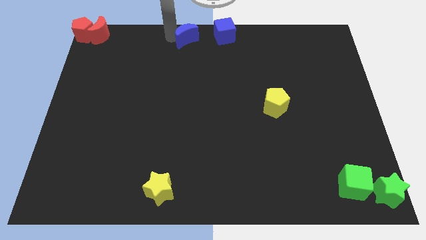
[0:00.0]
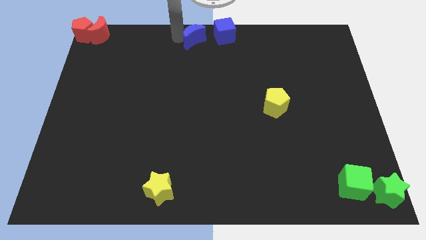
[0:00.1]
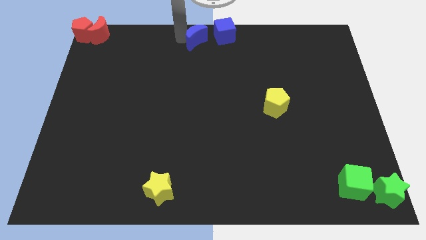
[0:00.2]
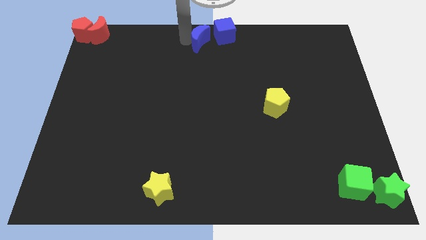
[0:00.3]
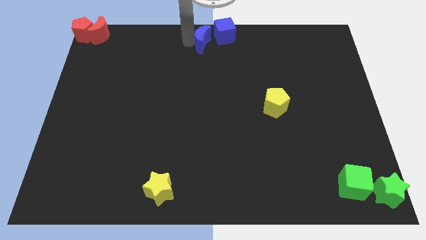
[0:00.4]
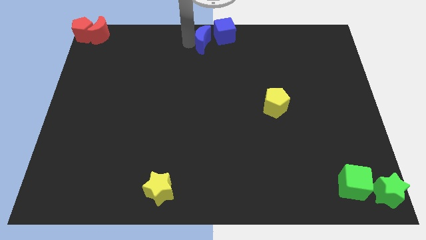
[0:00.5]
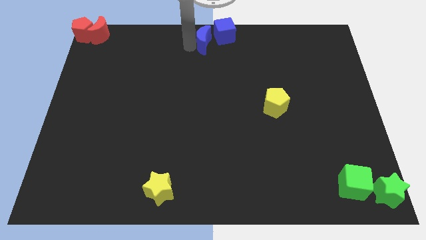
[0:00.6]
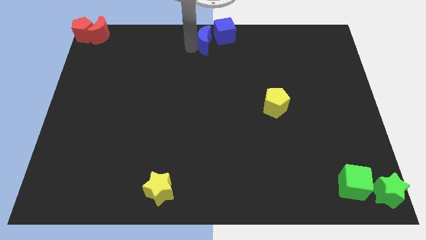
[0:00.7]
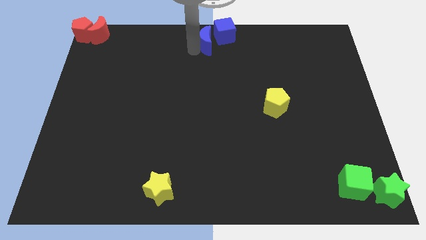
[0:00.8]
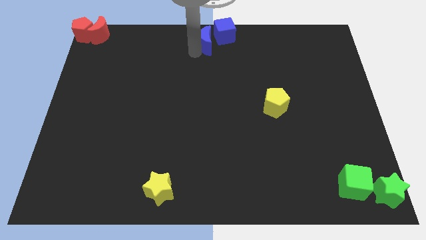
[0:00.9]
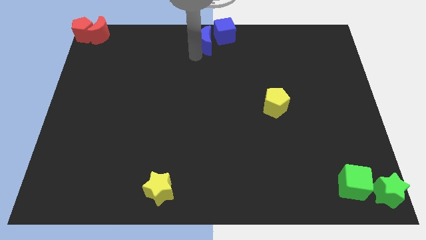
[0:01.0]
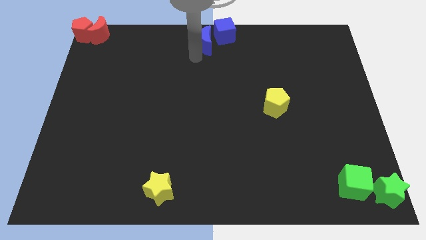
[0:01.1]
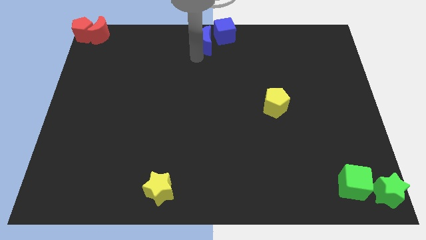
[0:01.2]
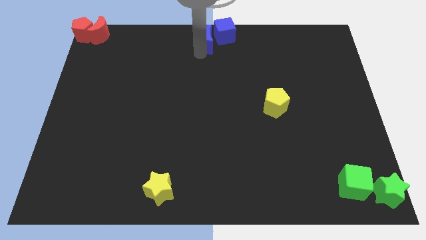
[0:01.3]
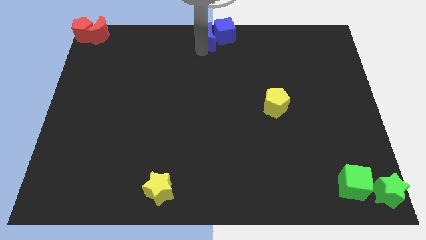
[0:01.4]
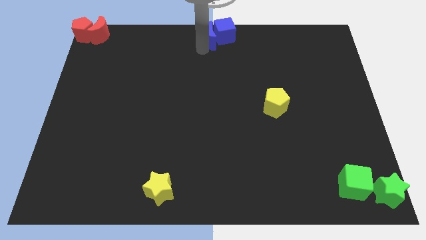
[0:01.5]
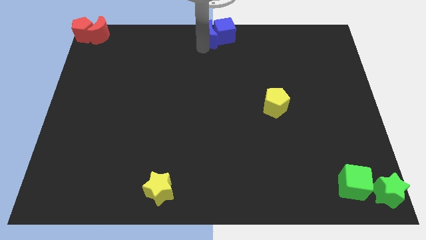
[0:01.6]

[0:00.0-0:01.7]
push the blue crescent left to the blue cube

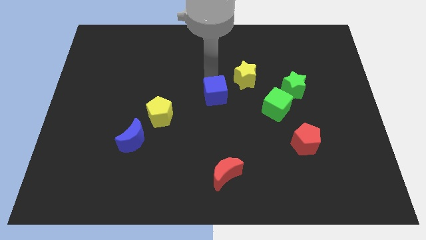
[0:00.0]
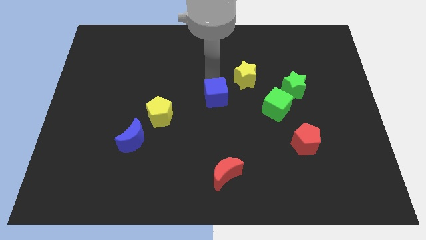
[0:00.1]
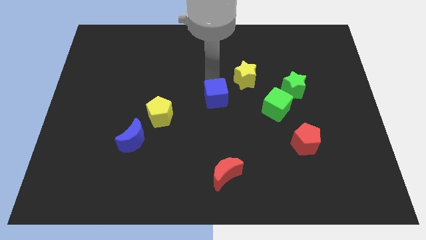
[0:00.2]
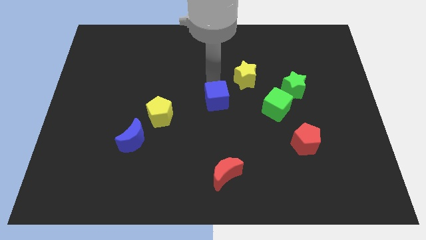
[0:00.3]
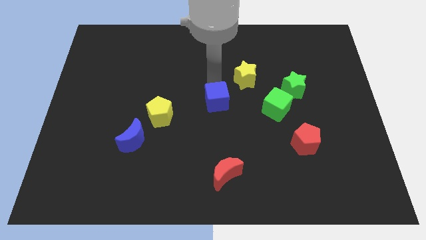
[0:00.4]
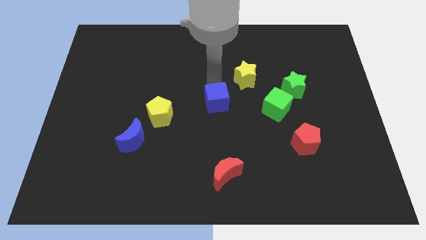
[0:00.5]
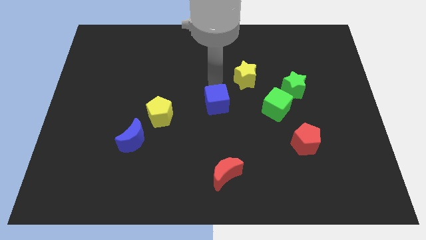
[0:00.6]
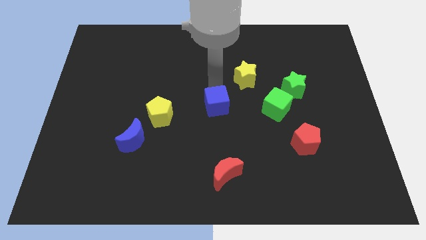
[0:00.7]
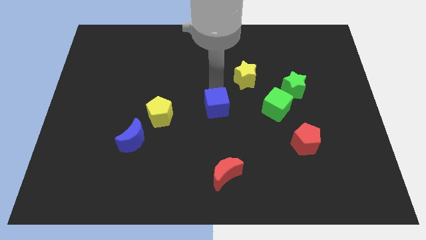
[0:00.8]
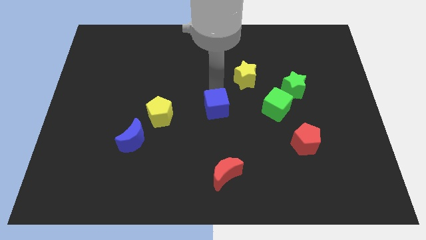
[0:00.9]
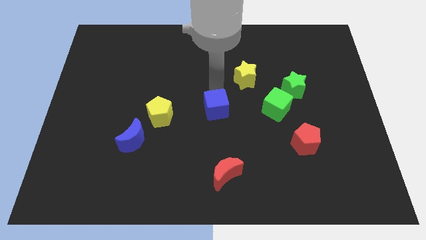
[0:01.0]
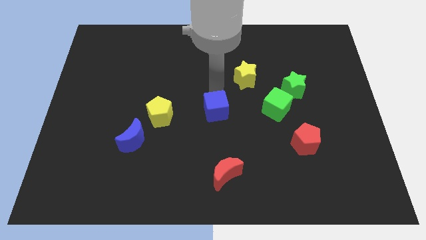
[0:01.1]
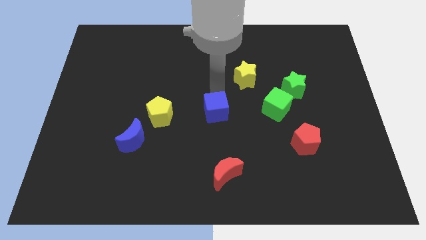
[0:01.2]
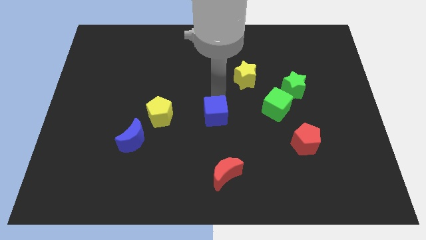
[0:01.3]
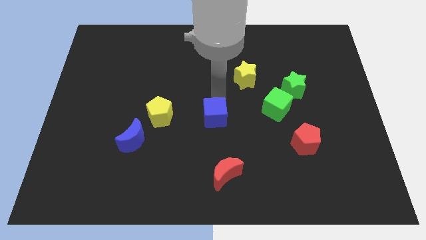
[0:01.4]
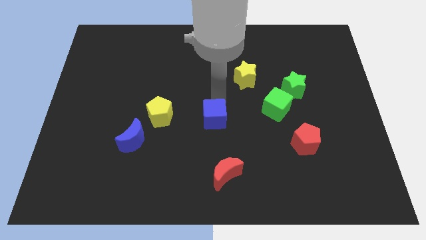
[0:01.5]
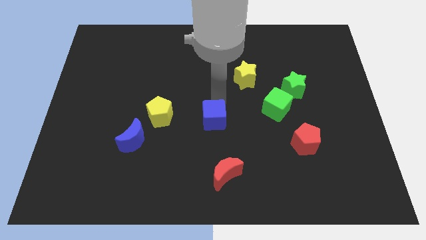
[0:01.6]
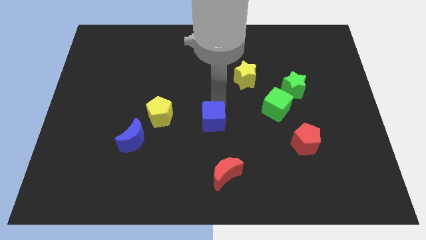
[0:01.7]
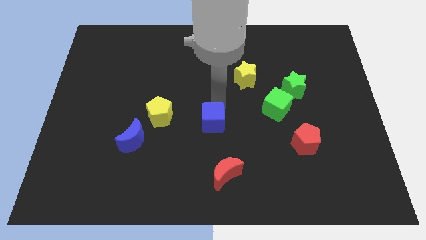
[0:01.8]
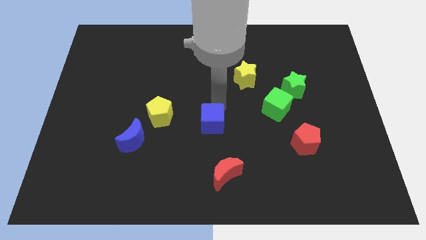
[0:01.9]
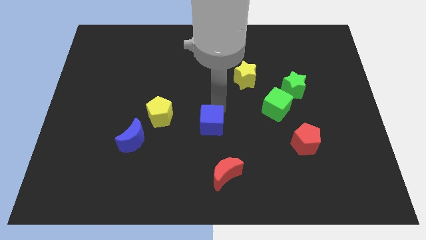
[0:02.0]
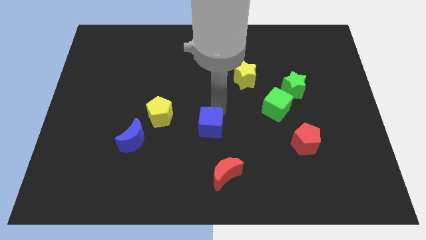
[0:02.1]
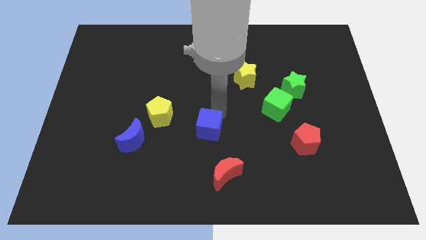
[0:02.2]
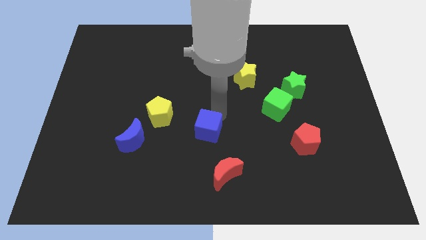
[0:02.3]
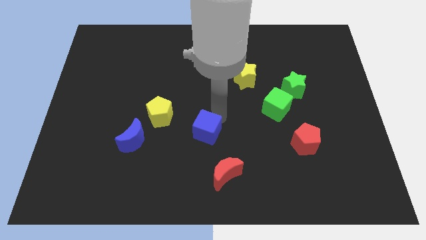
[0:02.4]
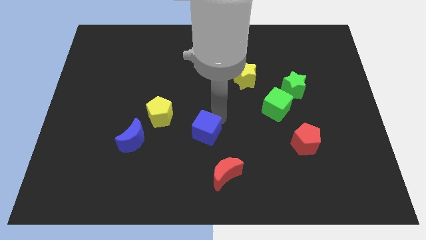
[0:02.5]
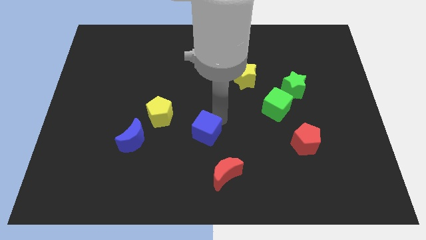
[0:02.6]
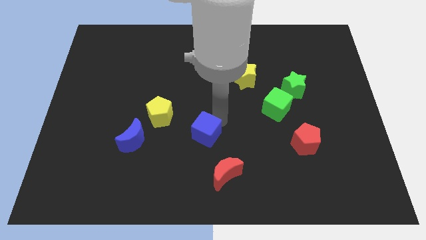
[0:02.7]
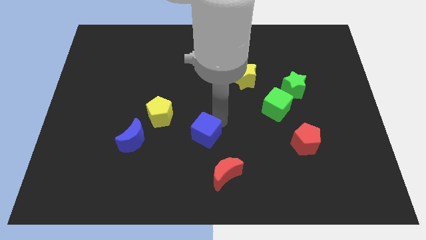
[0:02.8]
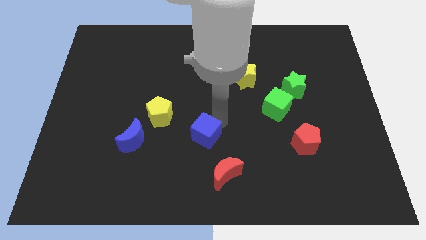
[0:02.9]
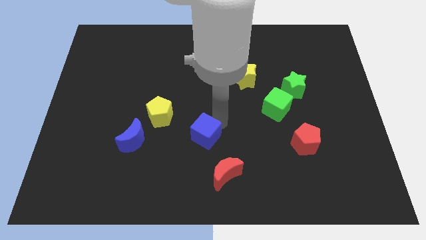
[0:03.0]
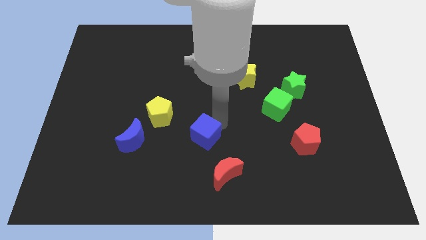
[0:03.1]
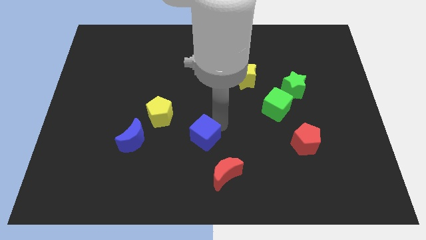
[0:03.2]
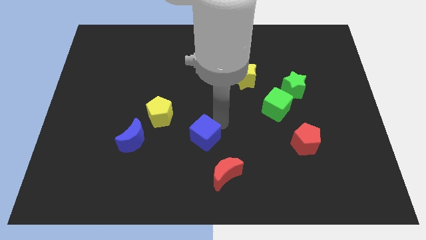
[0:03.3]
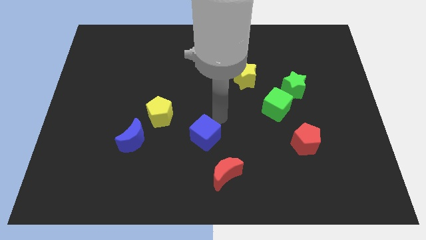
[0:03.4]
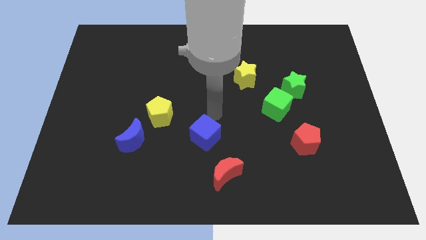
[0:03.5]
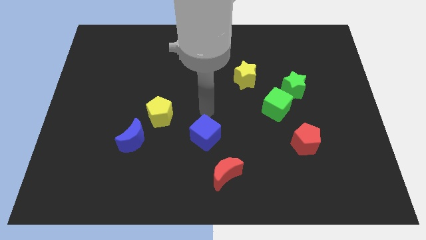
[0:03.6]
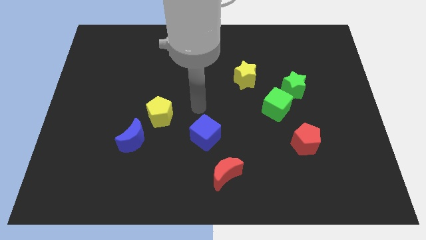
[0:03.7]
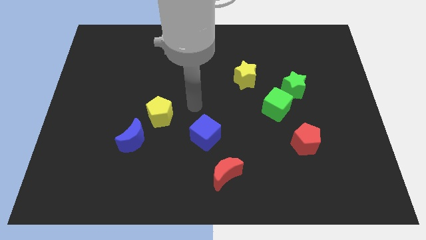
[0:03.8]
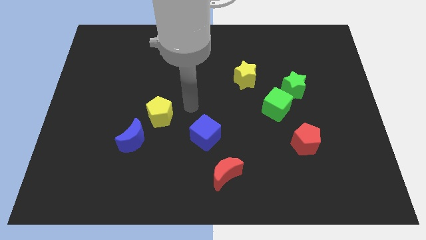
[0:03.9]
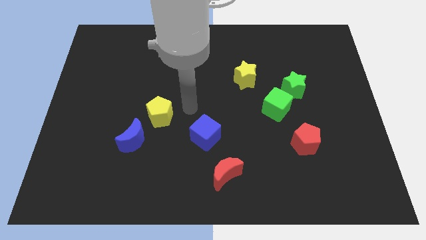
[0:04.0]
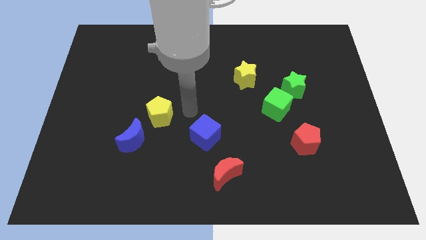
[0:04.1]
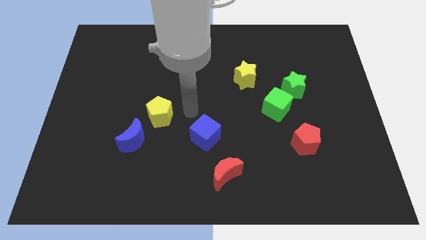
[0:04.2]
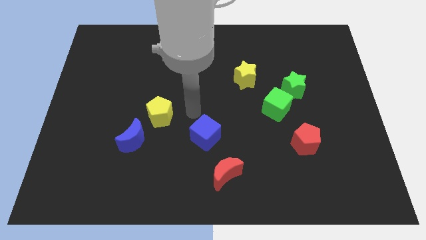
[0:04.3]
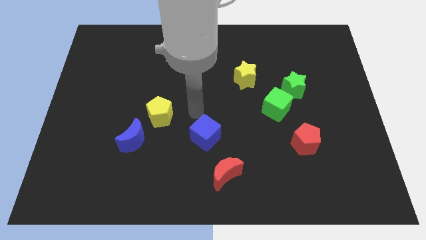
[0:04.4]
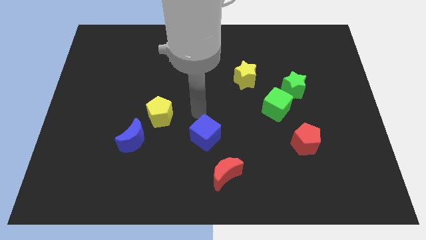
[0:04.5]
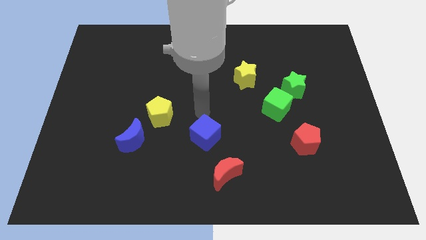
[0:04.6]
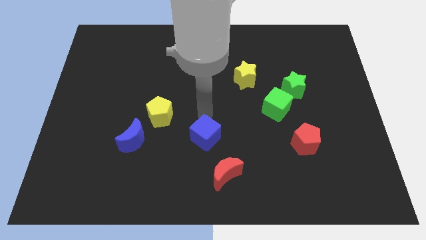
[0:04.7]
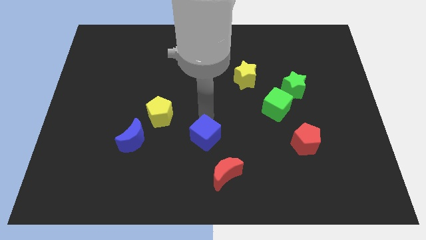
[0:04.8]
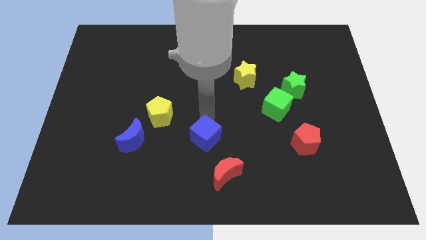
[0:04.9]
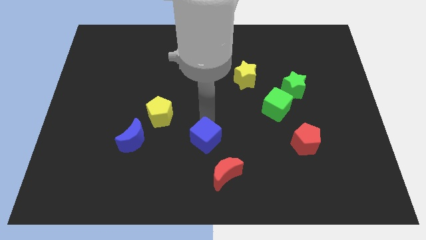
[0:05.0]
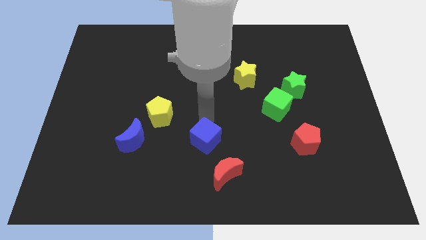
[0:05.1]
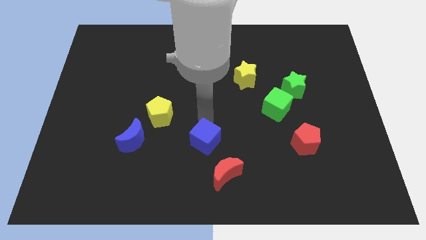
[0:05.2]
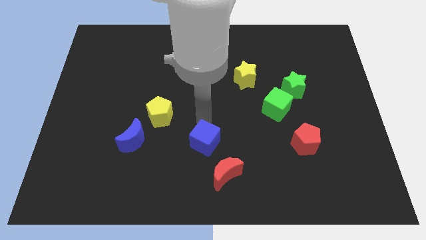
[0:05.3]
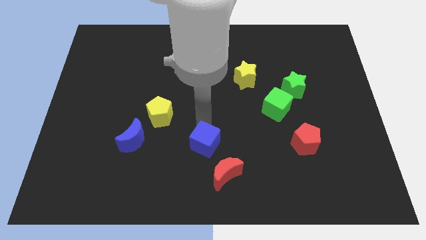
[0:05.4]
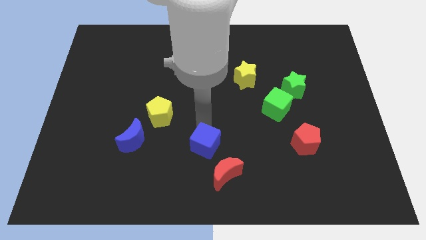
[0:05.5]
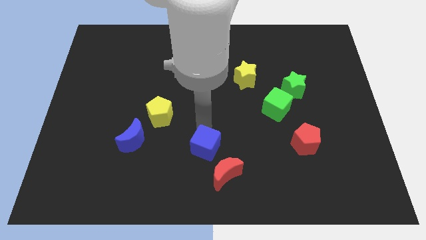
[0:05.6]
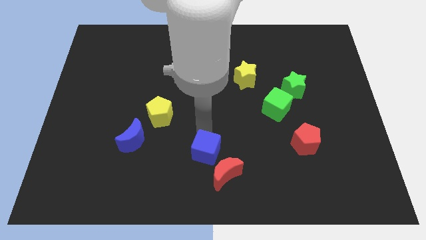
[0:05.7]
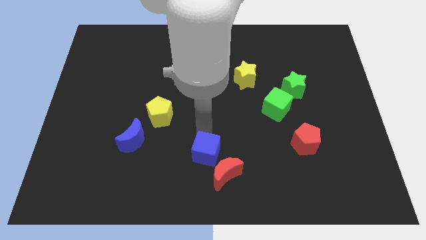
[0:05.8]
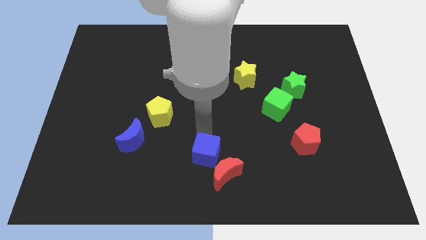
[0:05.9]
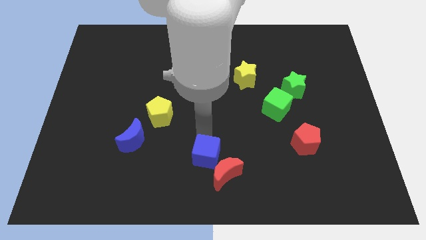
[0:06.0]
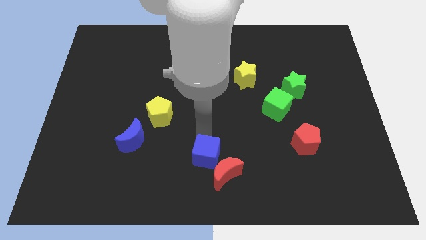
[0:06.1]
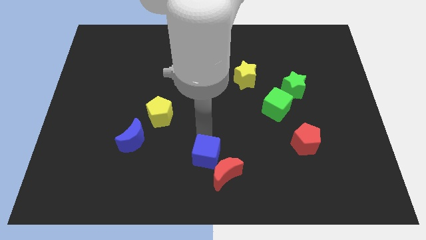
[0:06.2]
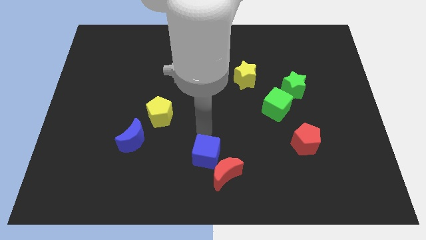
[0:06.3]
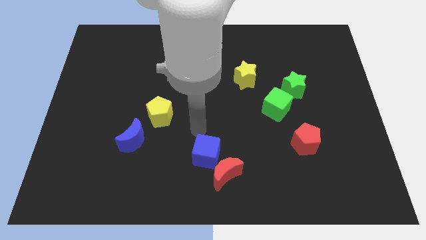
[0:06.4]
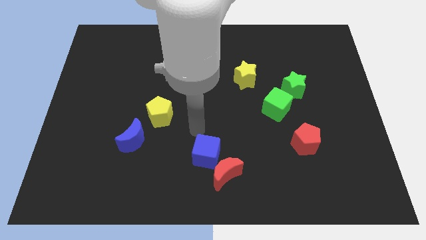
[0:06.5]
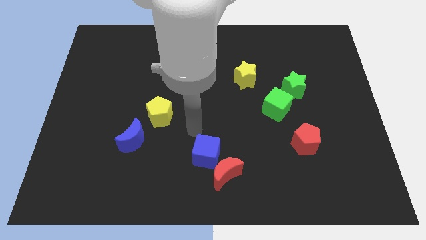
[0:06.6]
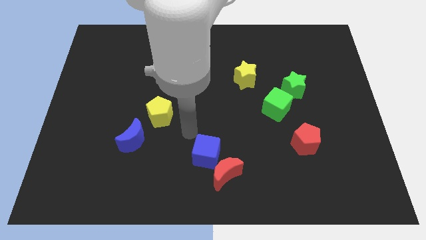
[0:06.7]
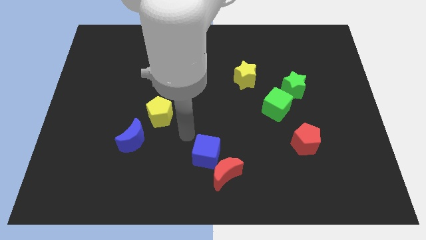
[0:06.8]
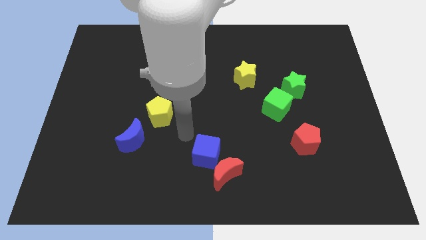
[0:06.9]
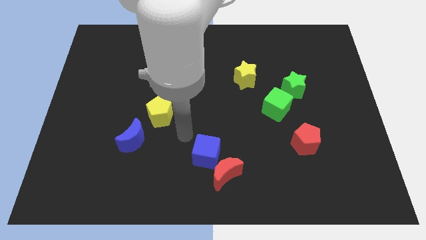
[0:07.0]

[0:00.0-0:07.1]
move blue cube into red moon

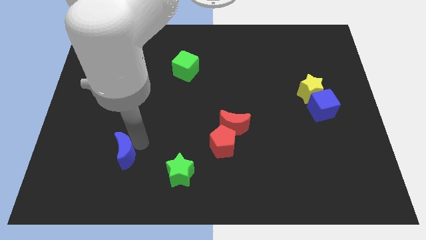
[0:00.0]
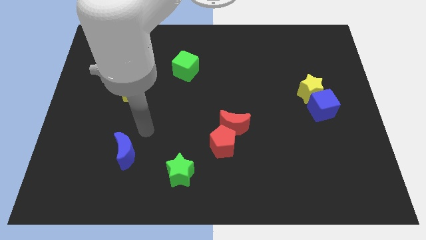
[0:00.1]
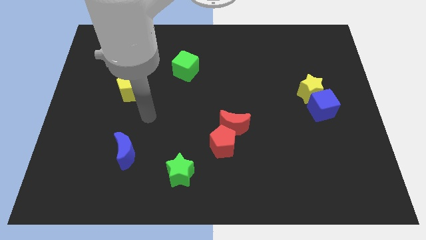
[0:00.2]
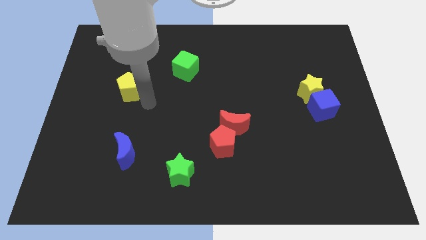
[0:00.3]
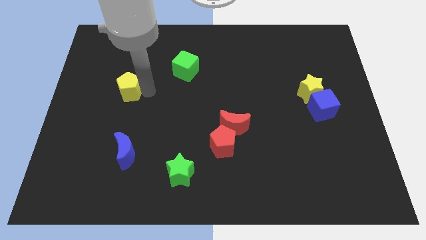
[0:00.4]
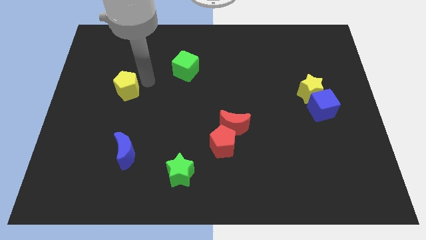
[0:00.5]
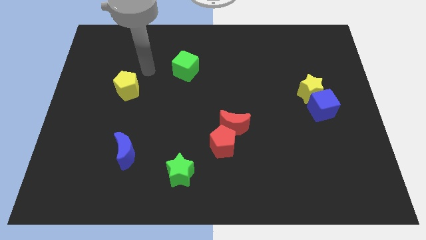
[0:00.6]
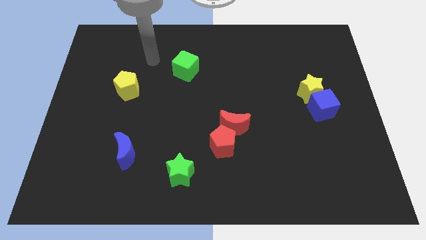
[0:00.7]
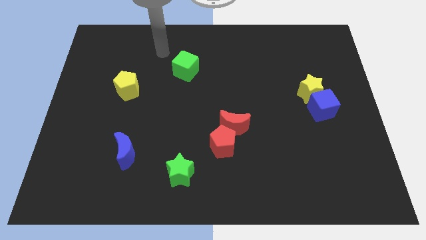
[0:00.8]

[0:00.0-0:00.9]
touch the yellow pentagon on the right side
